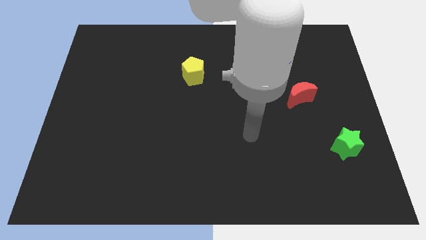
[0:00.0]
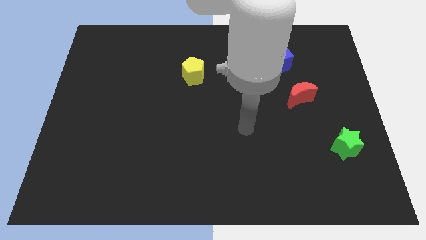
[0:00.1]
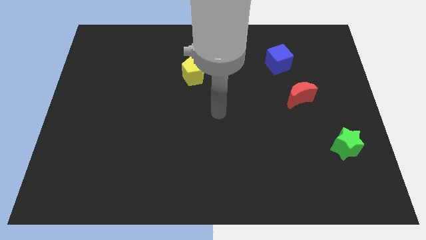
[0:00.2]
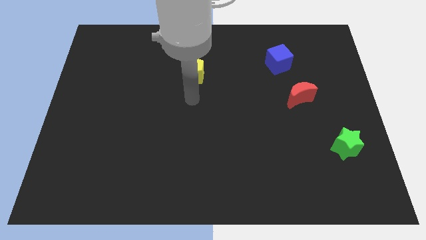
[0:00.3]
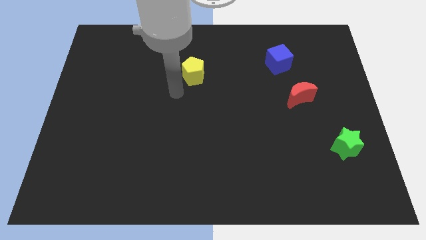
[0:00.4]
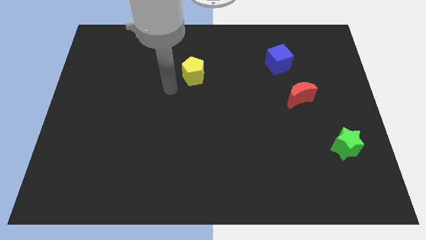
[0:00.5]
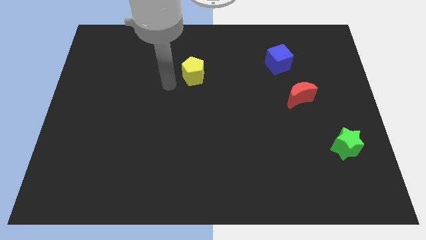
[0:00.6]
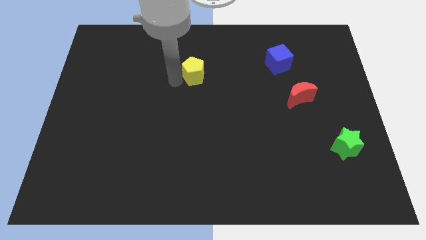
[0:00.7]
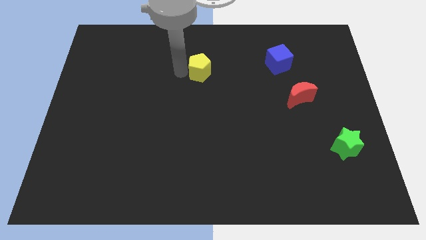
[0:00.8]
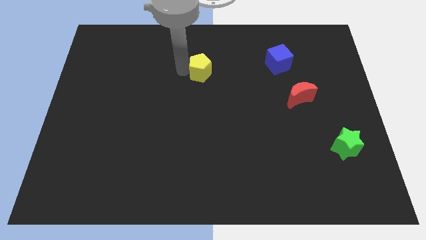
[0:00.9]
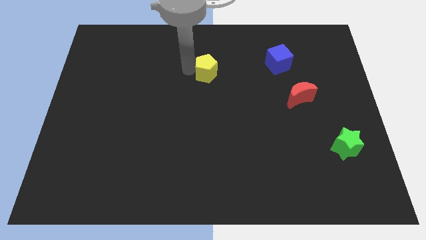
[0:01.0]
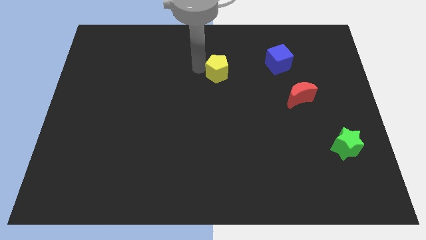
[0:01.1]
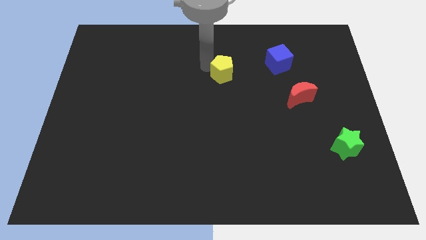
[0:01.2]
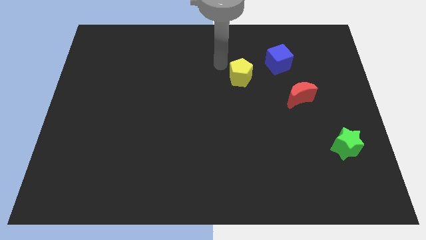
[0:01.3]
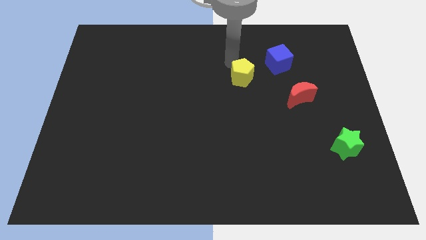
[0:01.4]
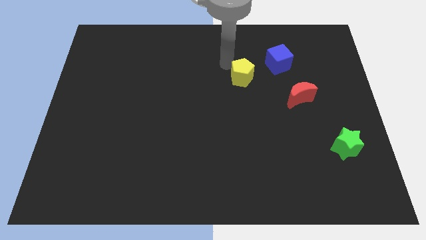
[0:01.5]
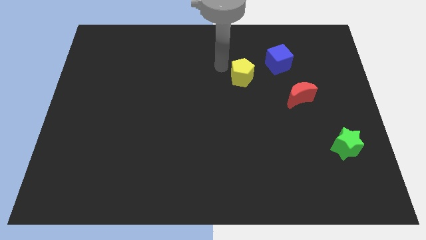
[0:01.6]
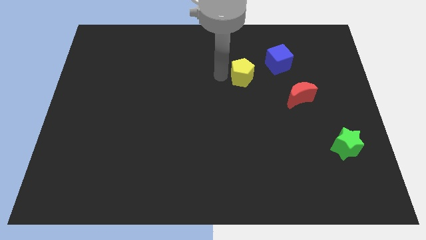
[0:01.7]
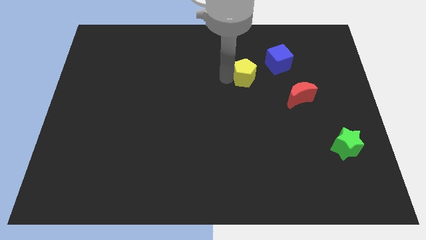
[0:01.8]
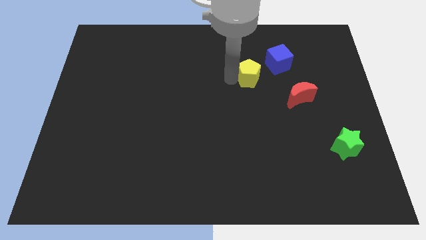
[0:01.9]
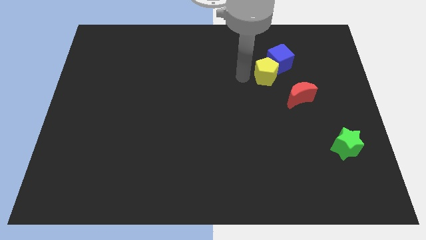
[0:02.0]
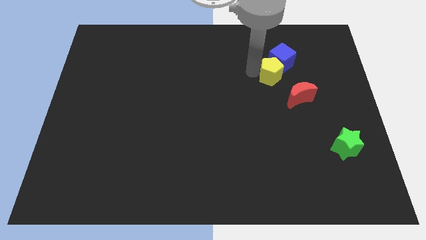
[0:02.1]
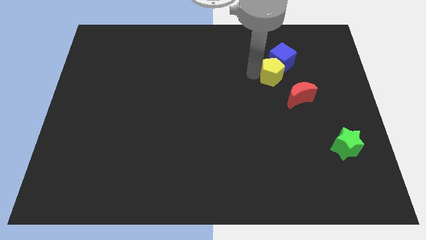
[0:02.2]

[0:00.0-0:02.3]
slide the yellow pentagon to the cube

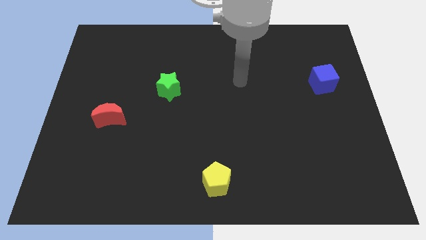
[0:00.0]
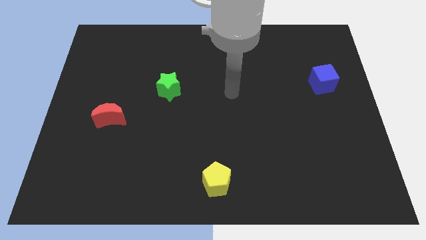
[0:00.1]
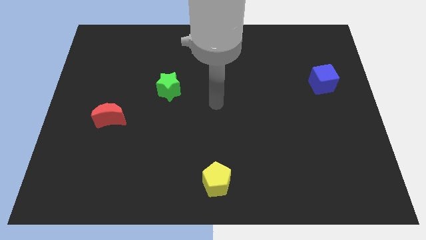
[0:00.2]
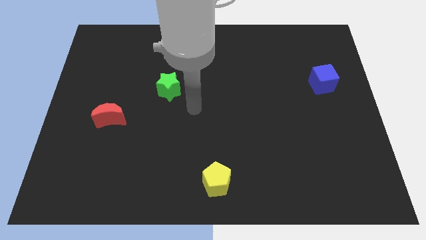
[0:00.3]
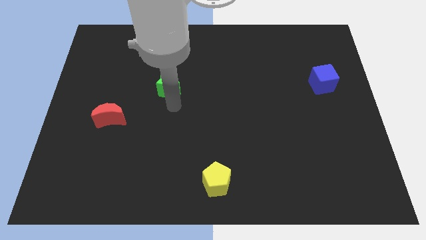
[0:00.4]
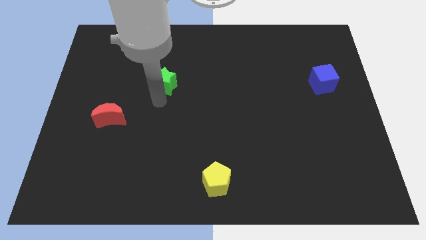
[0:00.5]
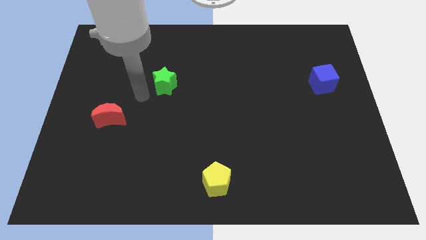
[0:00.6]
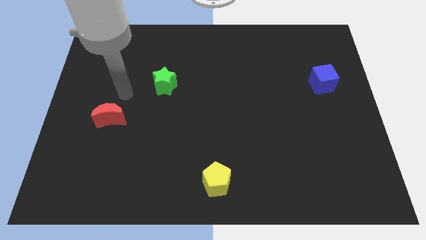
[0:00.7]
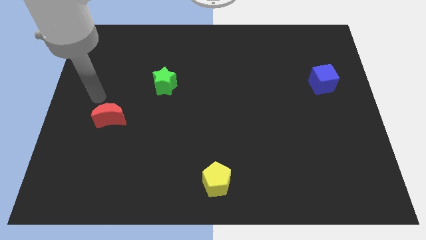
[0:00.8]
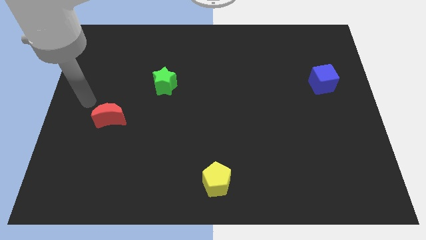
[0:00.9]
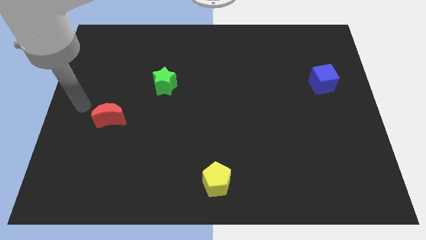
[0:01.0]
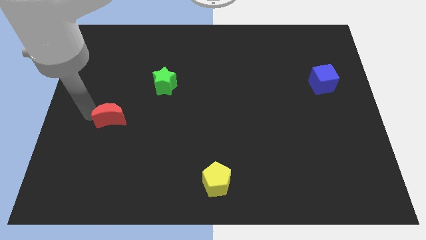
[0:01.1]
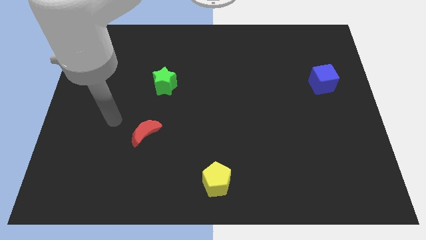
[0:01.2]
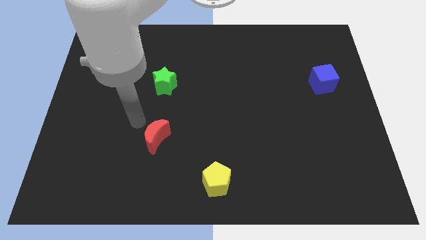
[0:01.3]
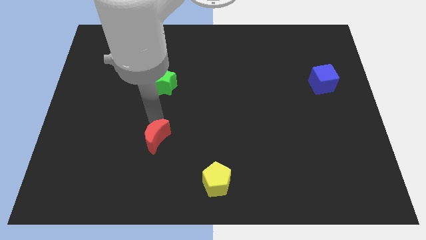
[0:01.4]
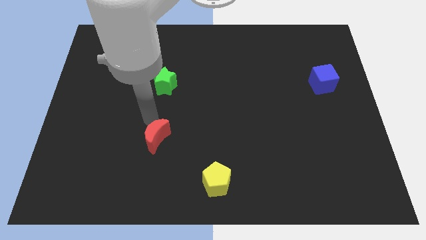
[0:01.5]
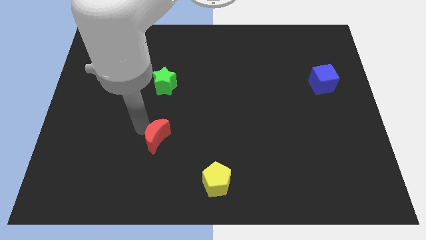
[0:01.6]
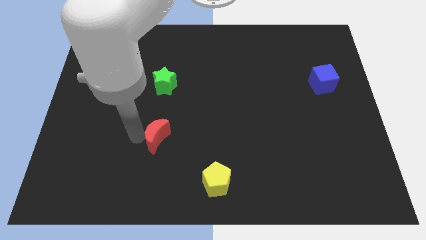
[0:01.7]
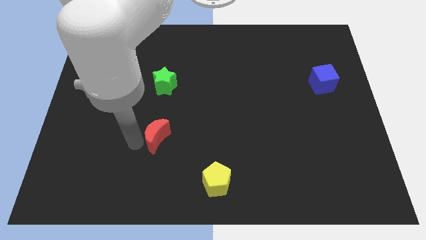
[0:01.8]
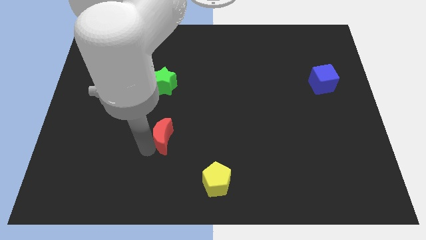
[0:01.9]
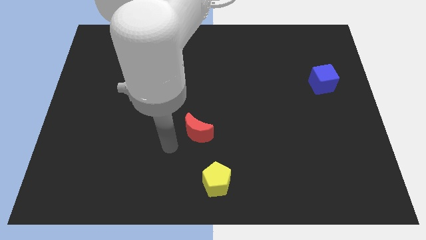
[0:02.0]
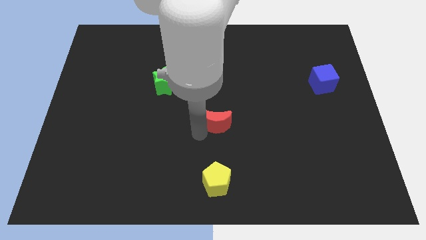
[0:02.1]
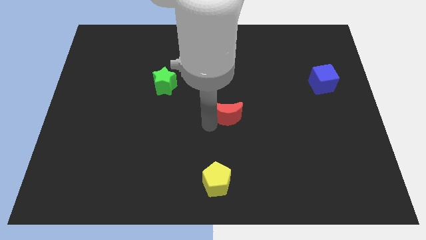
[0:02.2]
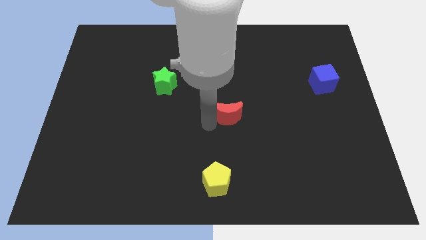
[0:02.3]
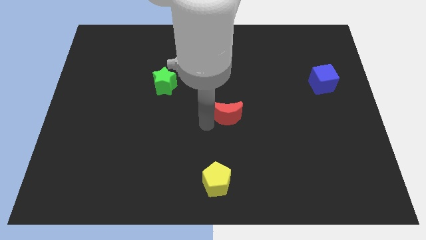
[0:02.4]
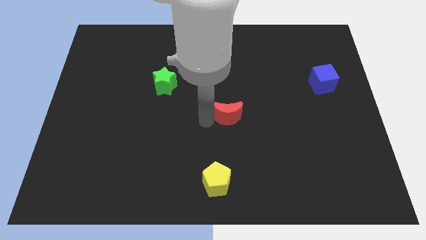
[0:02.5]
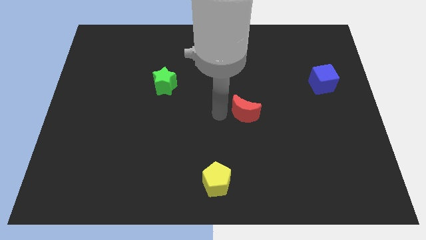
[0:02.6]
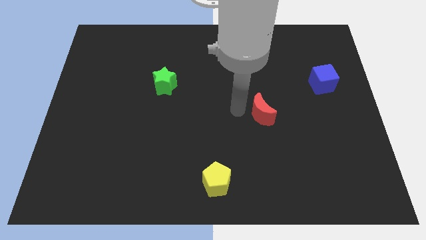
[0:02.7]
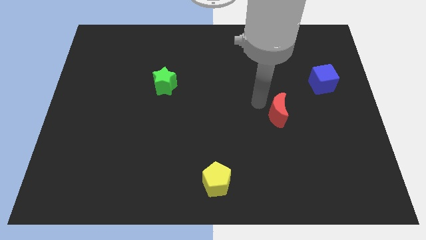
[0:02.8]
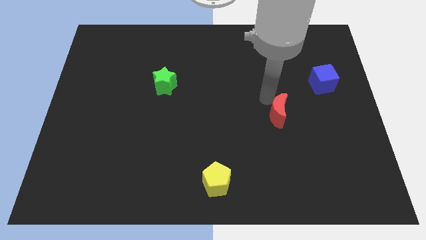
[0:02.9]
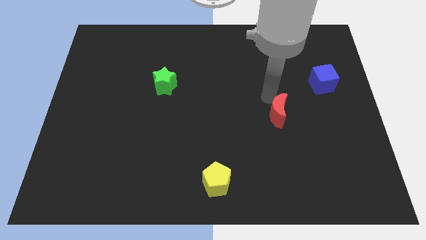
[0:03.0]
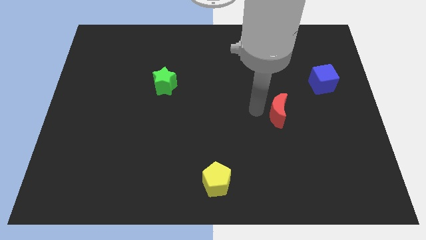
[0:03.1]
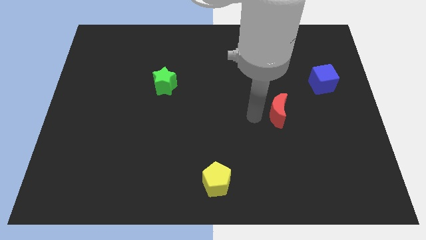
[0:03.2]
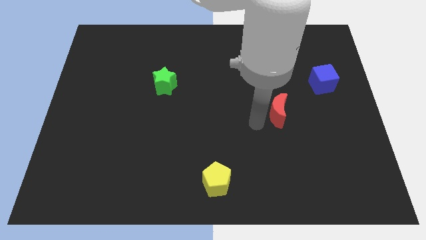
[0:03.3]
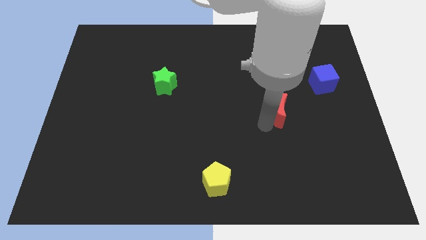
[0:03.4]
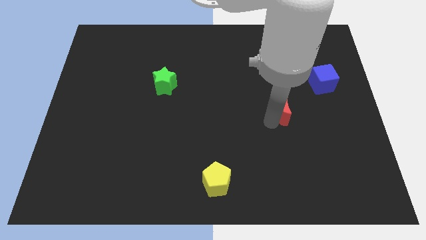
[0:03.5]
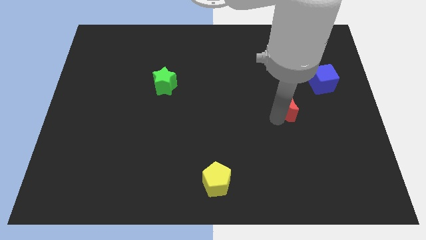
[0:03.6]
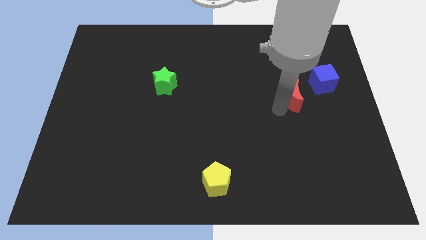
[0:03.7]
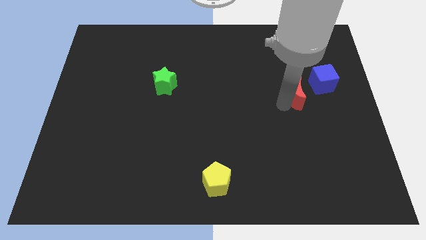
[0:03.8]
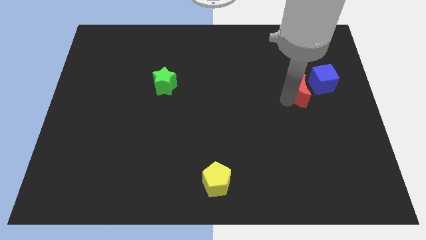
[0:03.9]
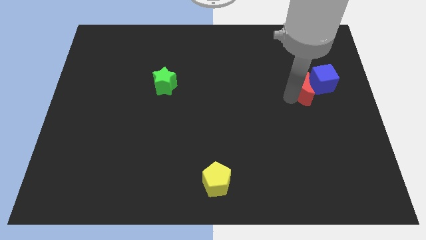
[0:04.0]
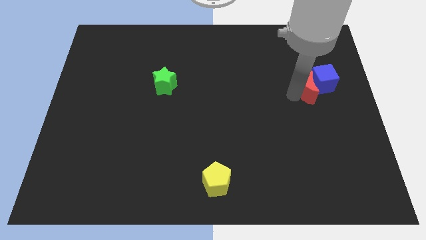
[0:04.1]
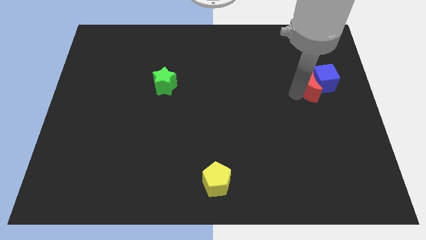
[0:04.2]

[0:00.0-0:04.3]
push the moon next to the blue block

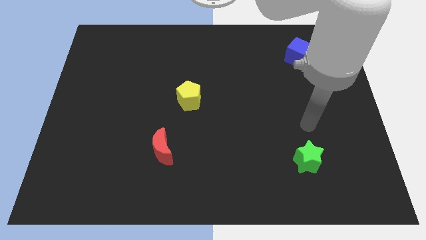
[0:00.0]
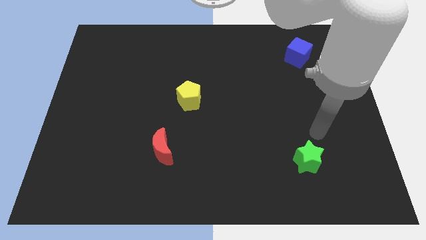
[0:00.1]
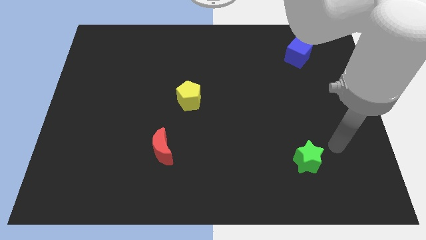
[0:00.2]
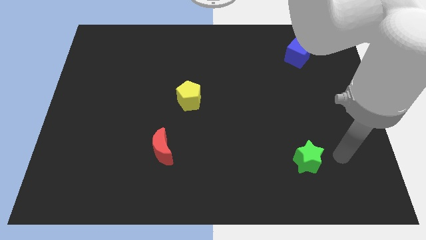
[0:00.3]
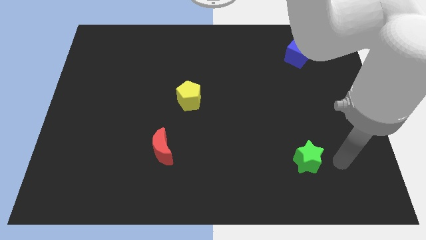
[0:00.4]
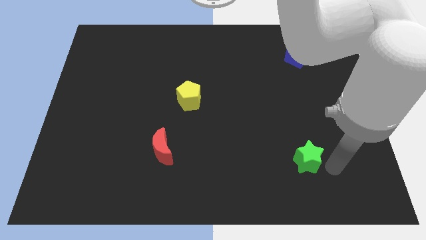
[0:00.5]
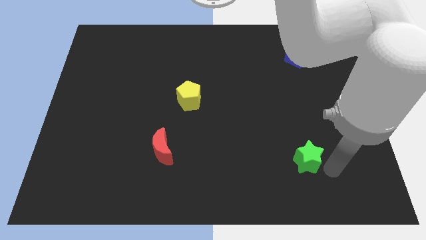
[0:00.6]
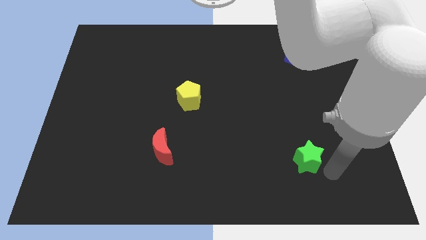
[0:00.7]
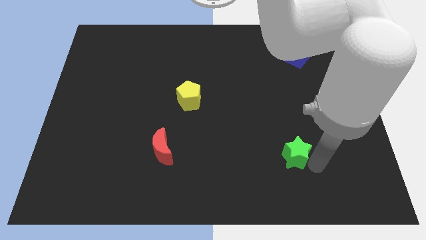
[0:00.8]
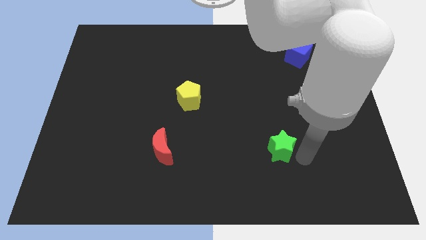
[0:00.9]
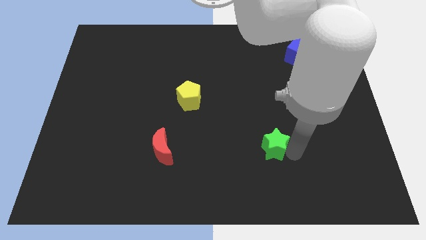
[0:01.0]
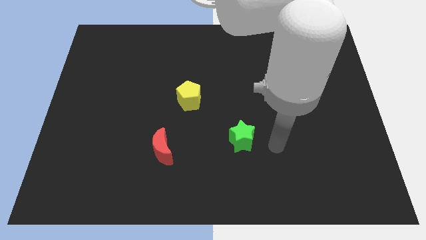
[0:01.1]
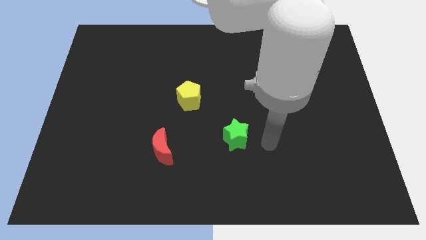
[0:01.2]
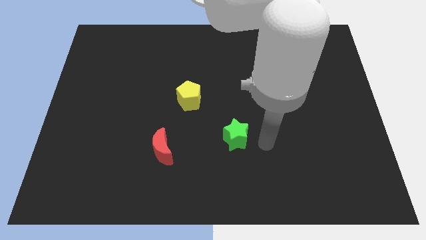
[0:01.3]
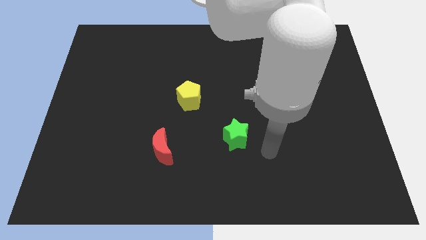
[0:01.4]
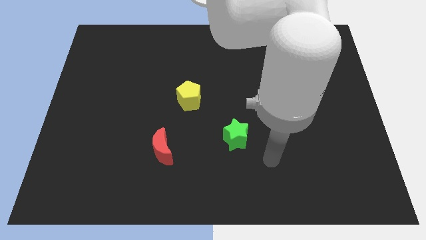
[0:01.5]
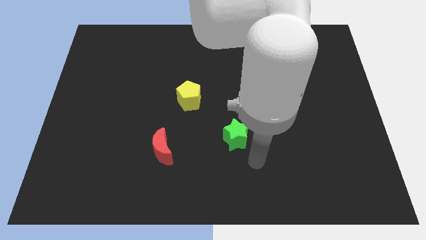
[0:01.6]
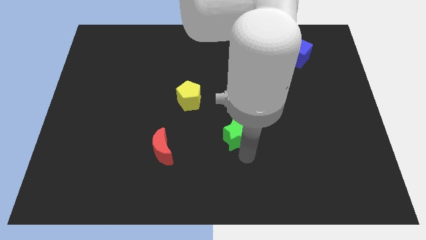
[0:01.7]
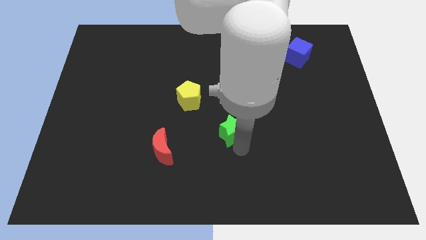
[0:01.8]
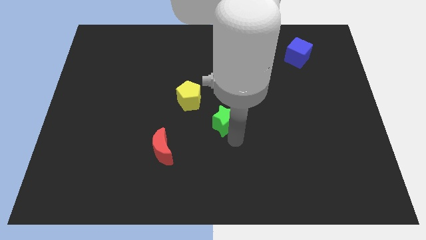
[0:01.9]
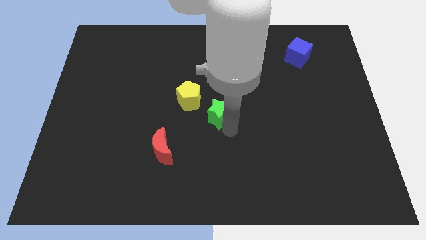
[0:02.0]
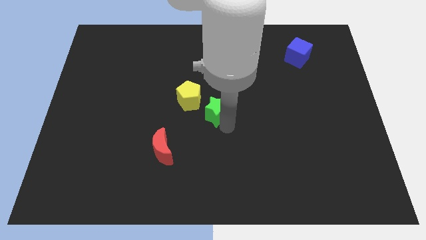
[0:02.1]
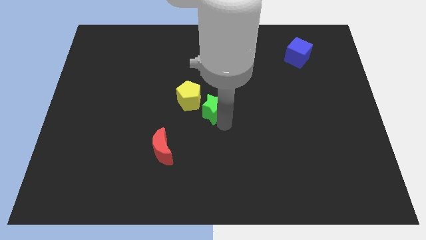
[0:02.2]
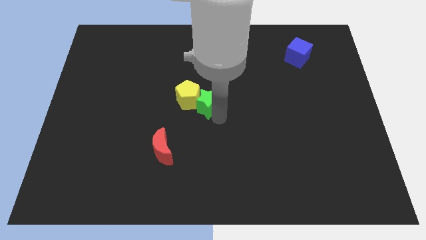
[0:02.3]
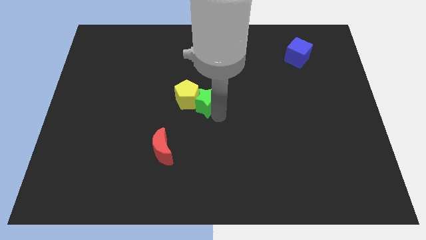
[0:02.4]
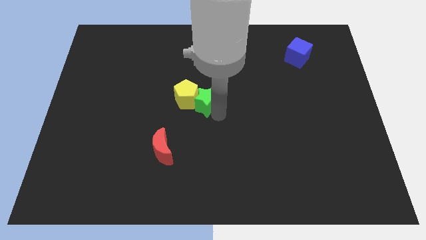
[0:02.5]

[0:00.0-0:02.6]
slide the green block close to the yellow block
